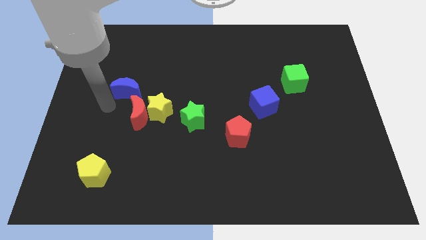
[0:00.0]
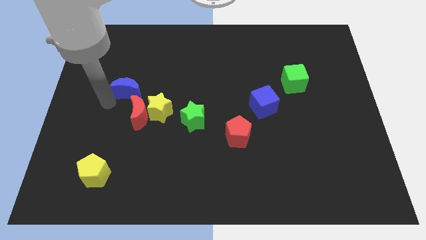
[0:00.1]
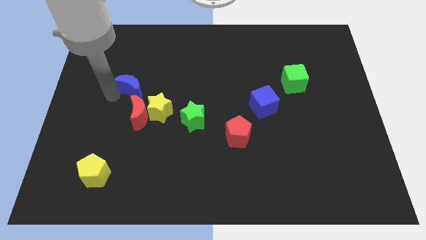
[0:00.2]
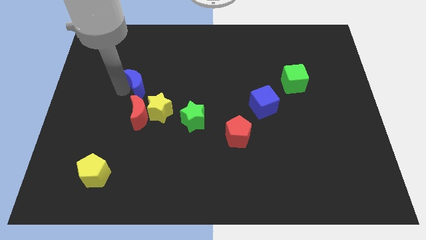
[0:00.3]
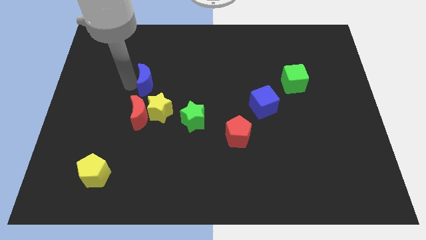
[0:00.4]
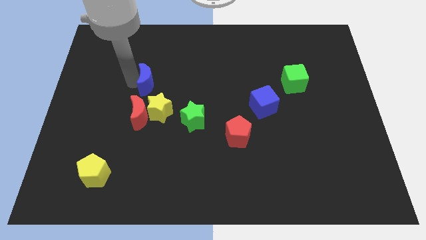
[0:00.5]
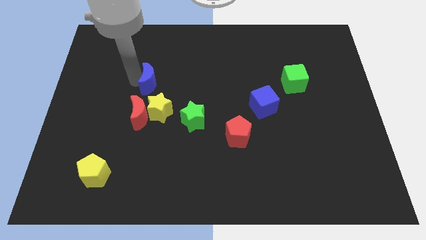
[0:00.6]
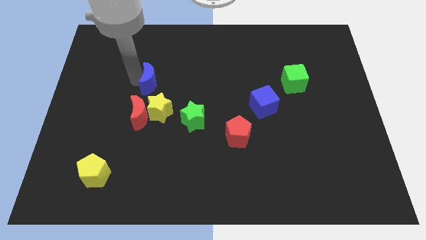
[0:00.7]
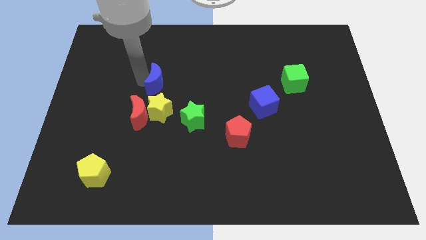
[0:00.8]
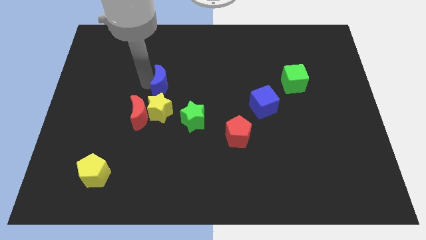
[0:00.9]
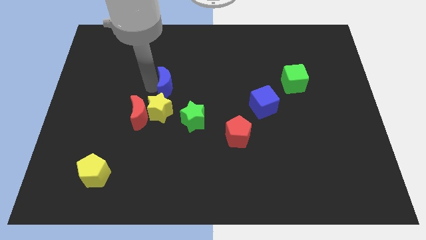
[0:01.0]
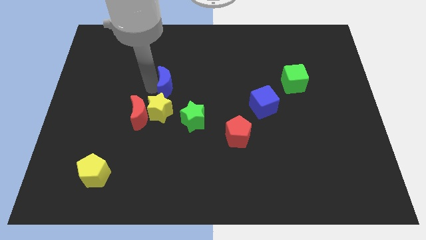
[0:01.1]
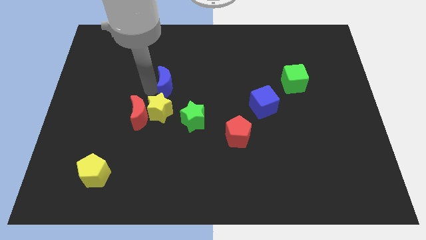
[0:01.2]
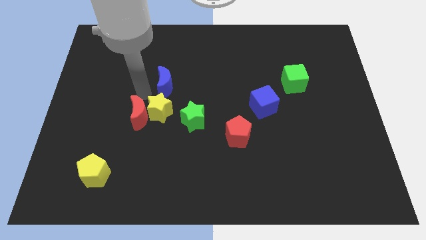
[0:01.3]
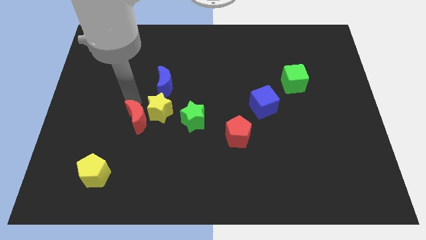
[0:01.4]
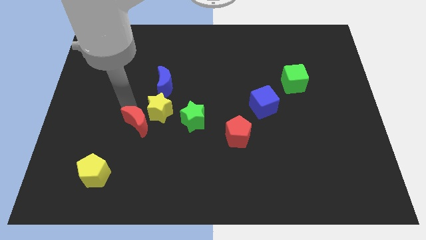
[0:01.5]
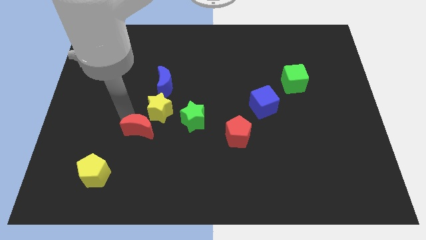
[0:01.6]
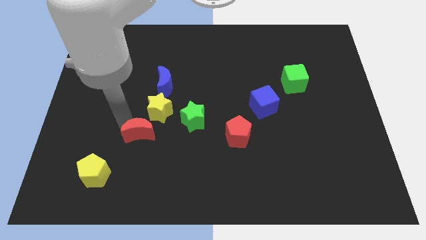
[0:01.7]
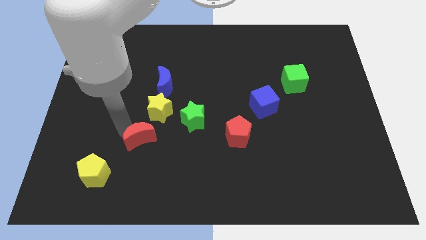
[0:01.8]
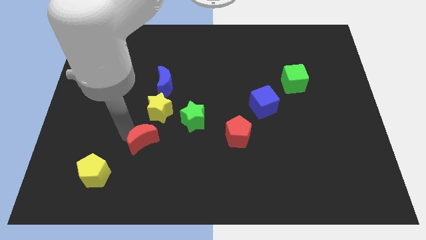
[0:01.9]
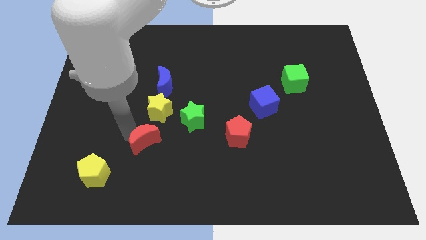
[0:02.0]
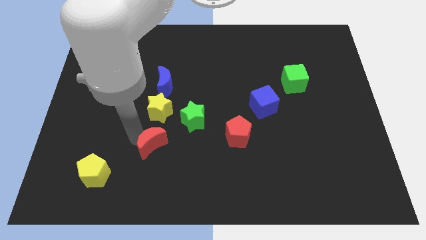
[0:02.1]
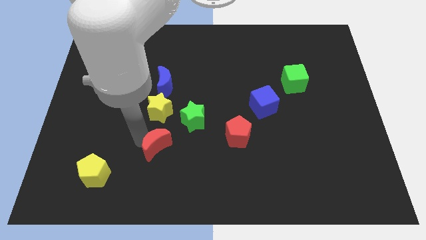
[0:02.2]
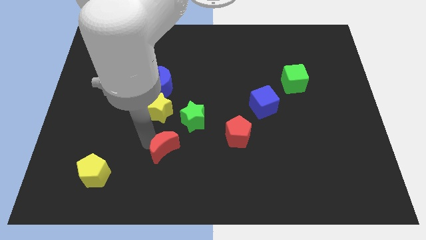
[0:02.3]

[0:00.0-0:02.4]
place red moon to the bottom of yellow star

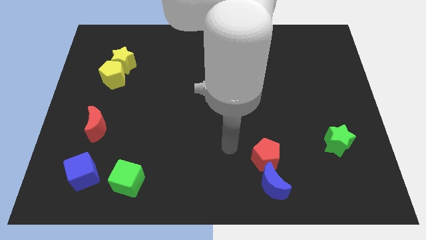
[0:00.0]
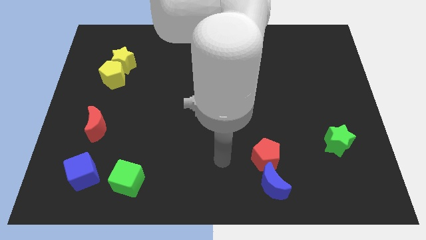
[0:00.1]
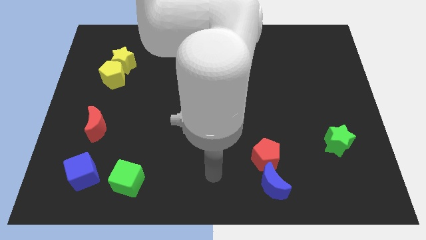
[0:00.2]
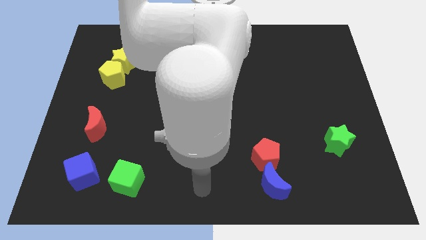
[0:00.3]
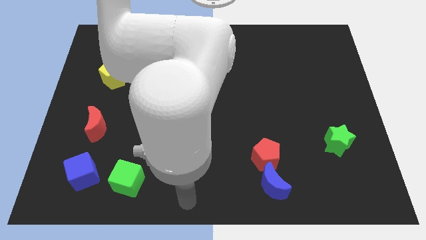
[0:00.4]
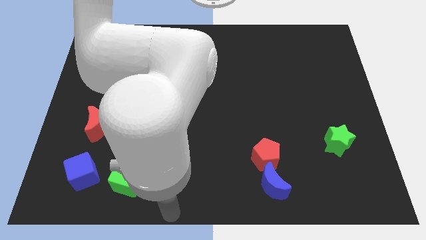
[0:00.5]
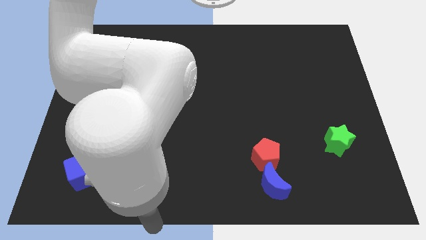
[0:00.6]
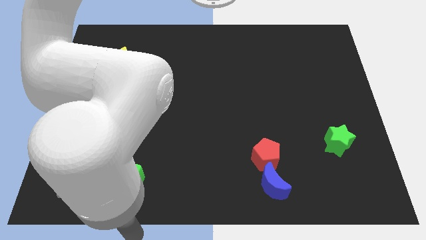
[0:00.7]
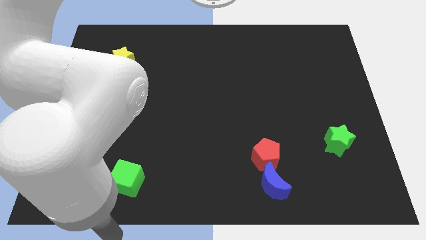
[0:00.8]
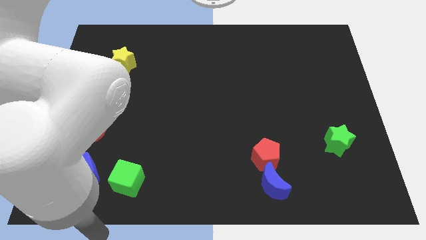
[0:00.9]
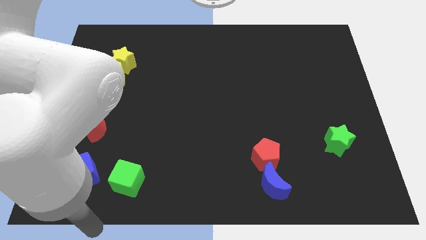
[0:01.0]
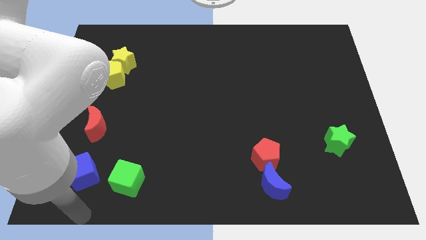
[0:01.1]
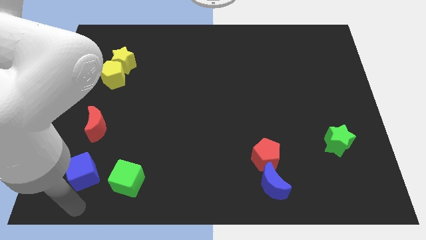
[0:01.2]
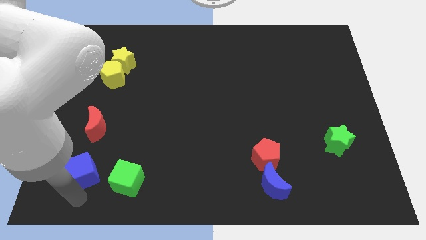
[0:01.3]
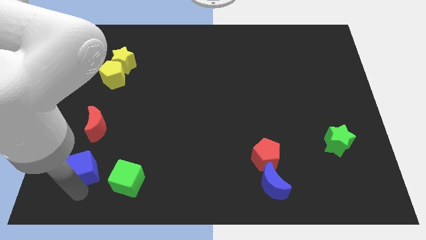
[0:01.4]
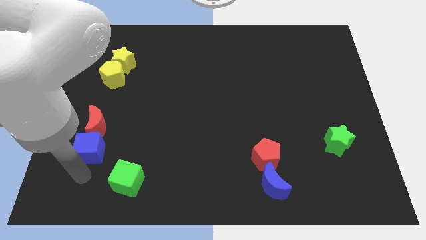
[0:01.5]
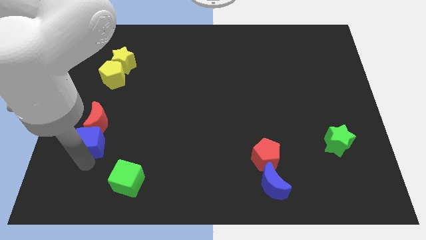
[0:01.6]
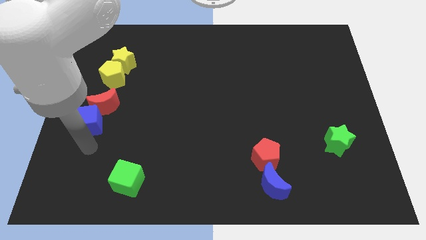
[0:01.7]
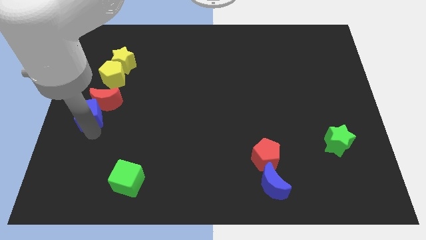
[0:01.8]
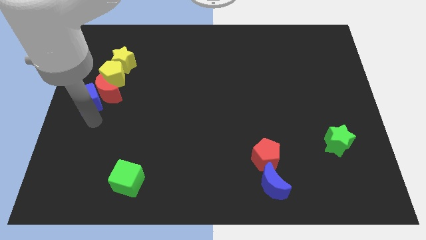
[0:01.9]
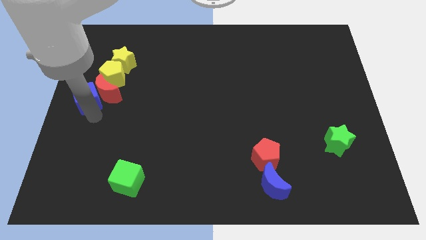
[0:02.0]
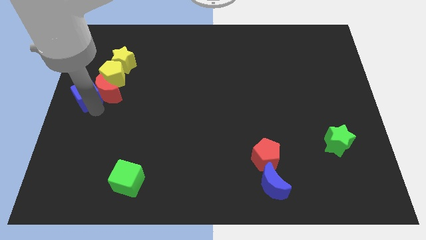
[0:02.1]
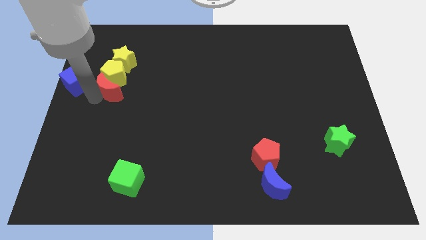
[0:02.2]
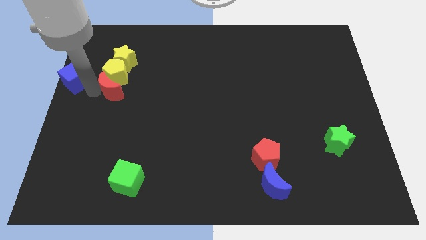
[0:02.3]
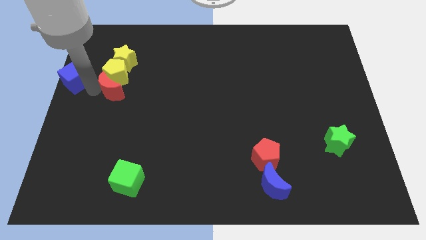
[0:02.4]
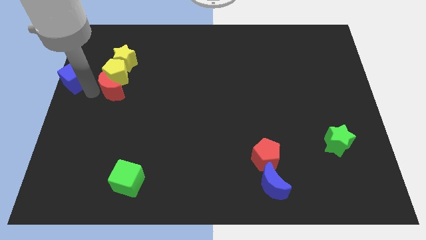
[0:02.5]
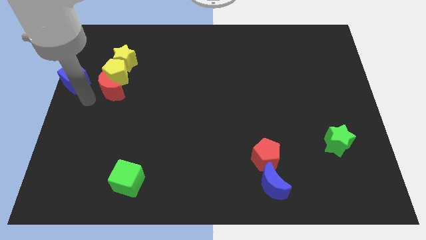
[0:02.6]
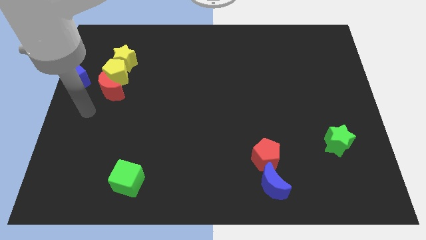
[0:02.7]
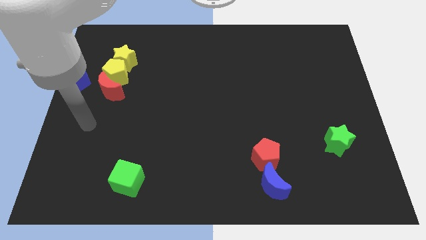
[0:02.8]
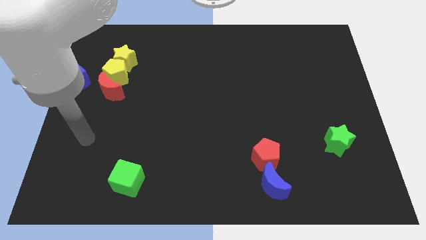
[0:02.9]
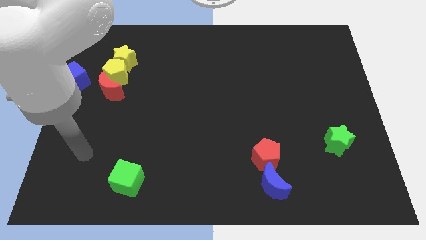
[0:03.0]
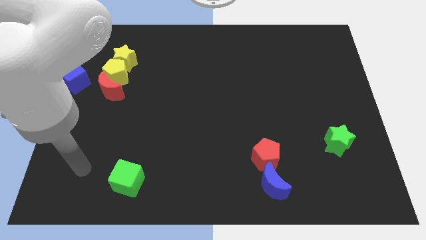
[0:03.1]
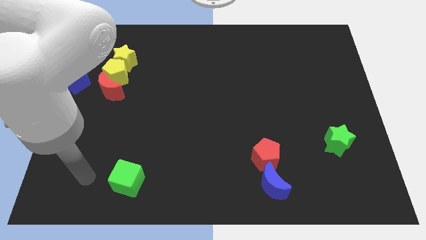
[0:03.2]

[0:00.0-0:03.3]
push the red moon and blue cube towards the top side of the board

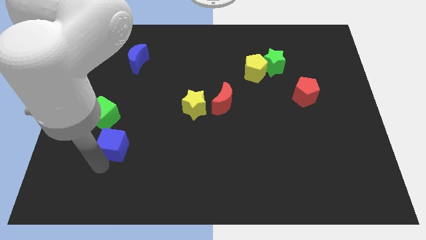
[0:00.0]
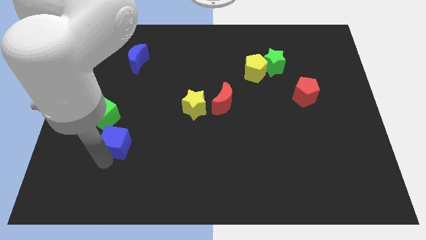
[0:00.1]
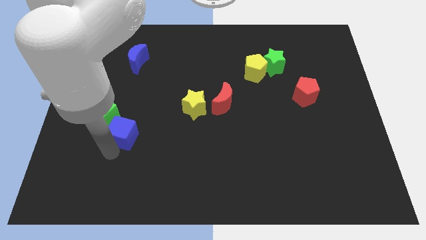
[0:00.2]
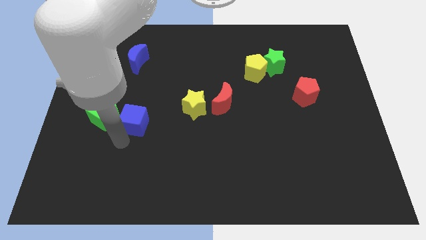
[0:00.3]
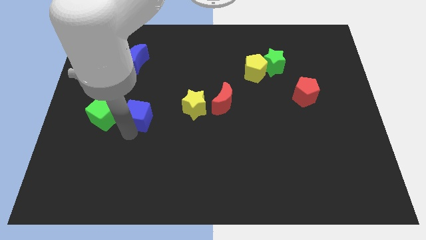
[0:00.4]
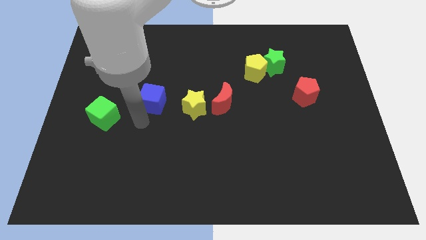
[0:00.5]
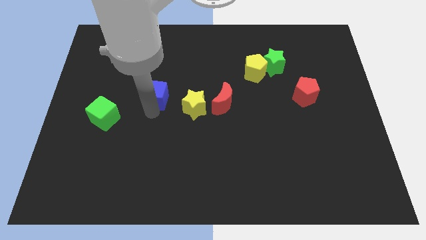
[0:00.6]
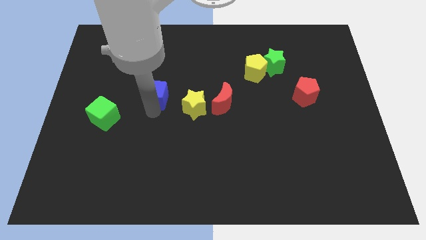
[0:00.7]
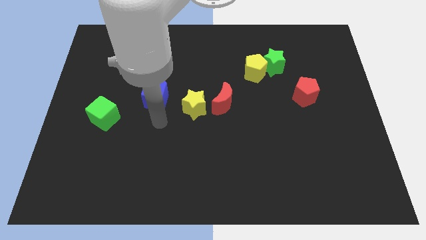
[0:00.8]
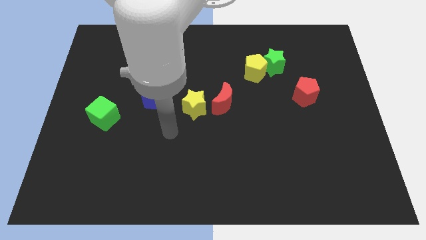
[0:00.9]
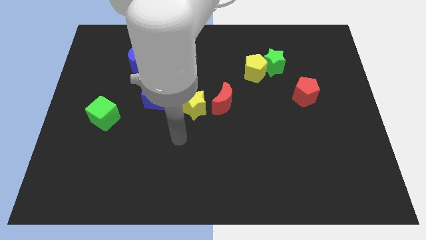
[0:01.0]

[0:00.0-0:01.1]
push the blue cube to the left of the yellow star

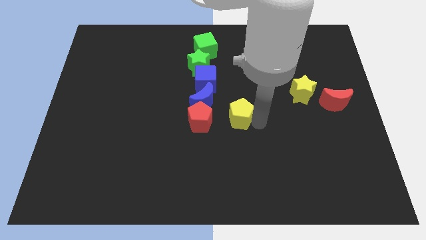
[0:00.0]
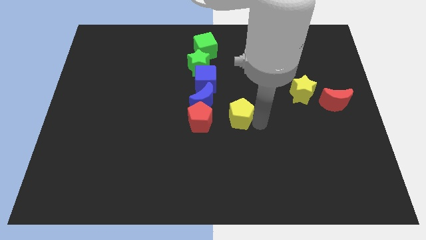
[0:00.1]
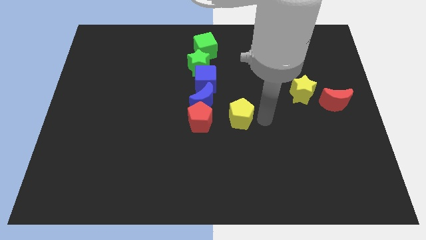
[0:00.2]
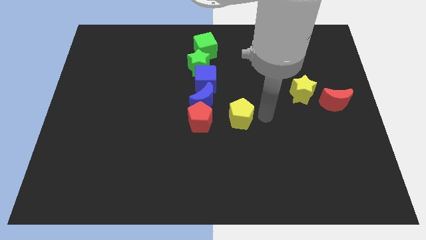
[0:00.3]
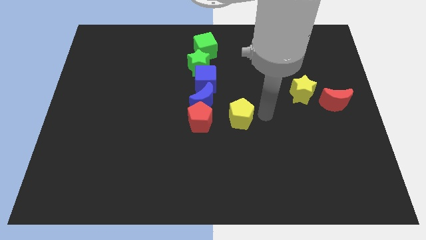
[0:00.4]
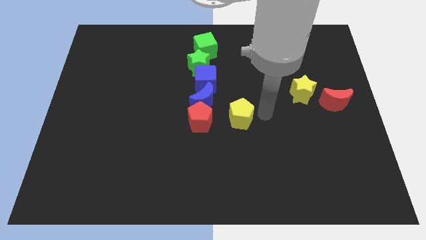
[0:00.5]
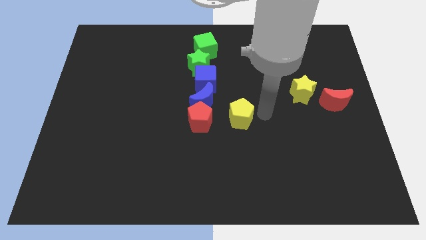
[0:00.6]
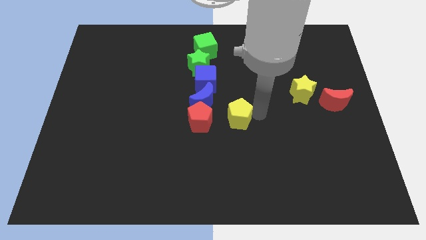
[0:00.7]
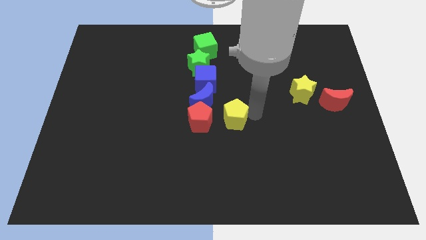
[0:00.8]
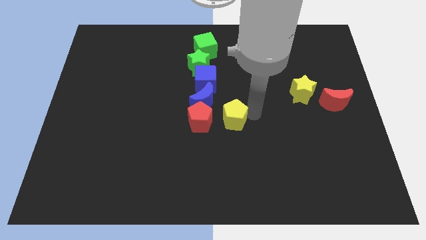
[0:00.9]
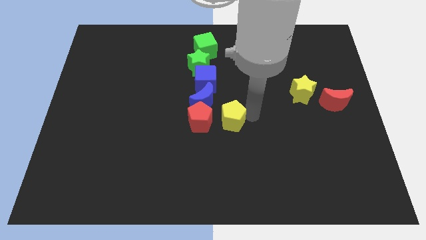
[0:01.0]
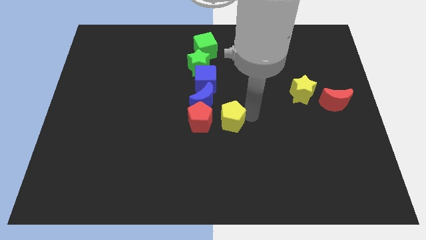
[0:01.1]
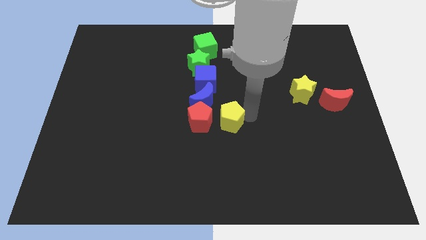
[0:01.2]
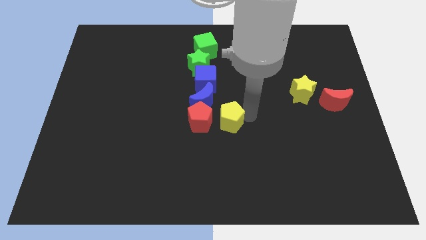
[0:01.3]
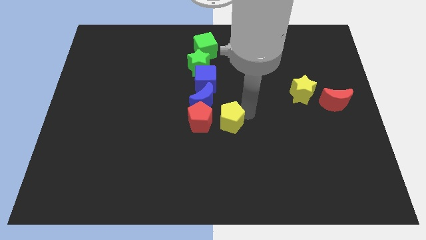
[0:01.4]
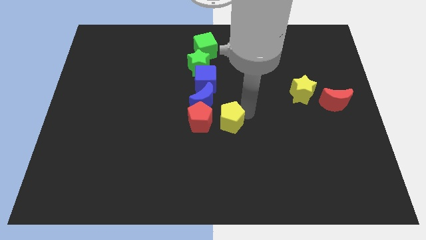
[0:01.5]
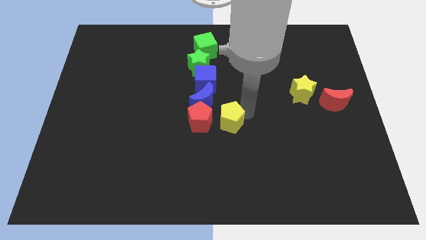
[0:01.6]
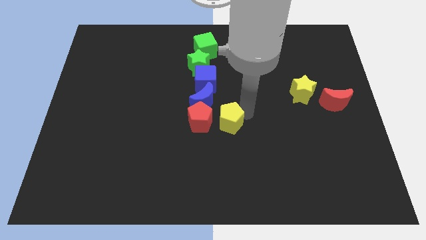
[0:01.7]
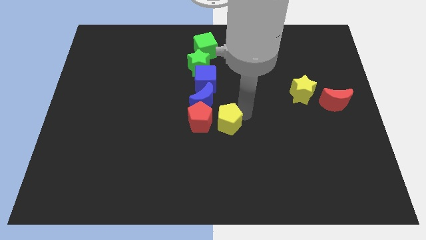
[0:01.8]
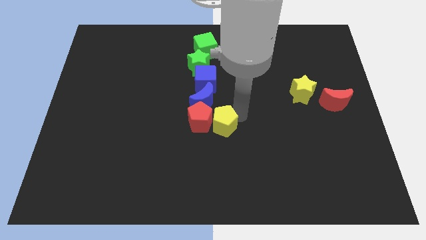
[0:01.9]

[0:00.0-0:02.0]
move the yellow pentagon to the right of the red pentagon

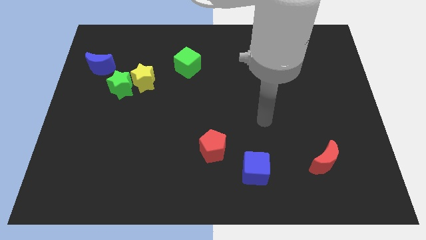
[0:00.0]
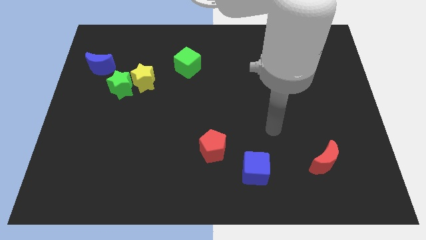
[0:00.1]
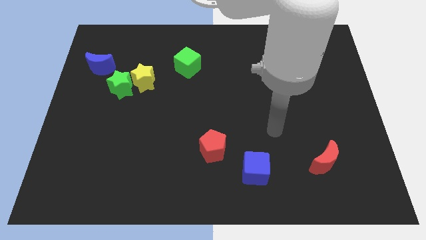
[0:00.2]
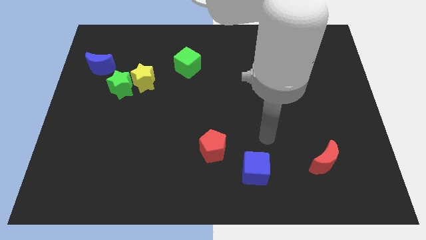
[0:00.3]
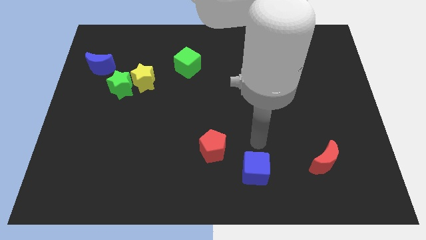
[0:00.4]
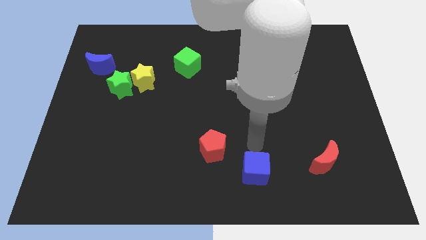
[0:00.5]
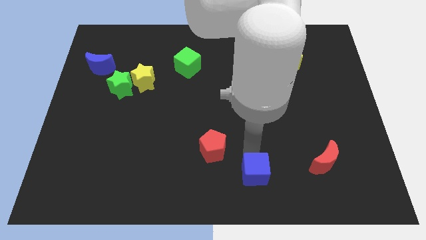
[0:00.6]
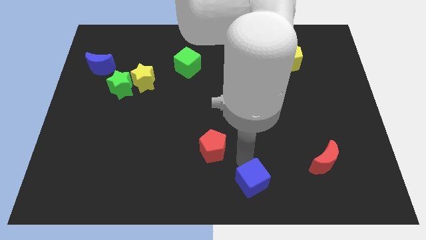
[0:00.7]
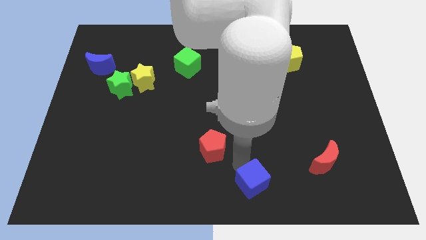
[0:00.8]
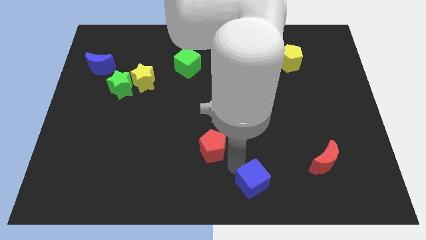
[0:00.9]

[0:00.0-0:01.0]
touch the top of blue cube
